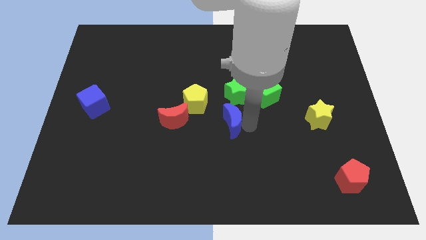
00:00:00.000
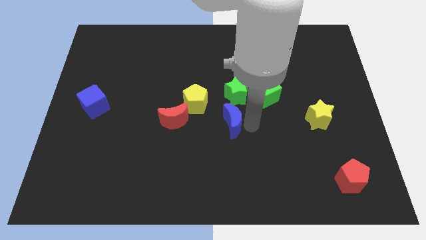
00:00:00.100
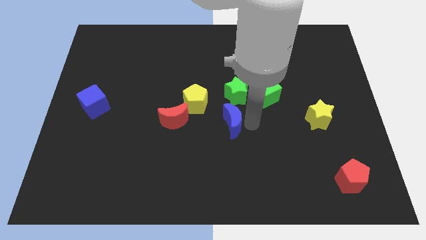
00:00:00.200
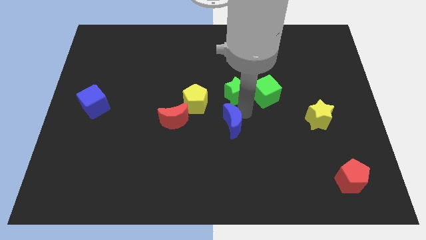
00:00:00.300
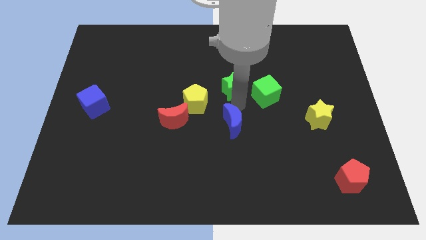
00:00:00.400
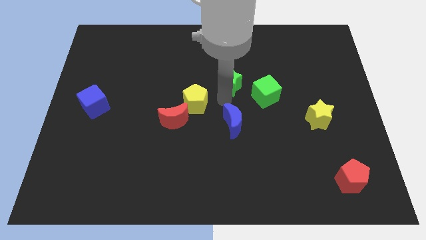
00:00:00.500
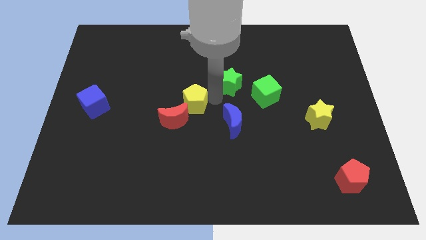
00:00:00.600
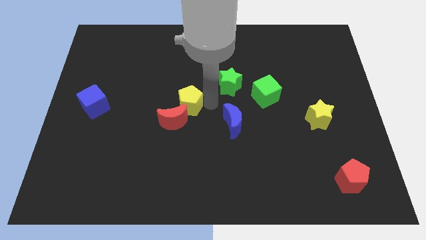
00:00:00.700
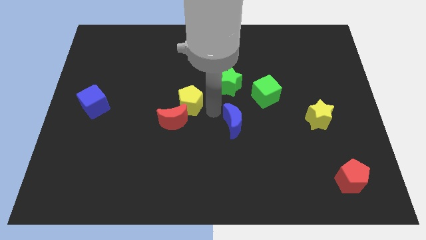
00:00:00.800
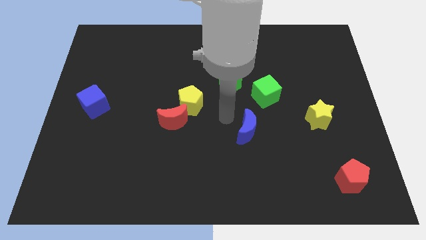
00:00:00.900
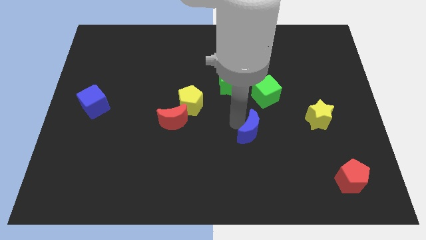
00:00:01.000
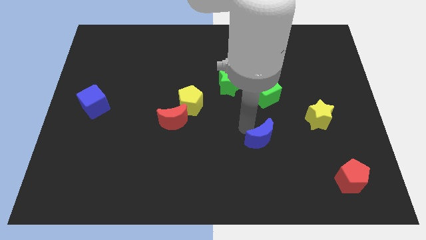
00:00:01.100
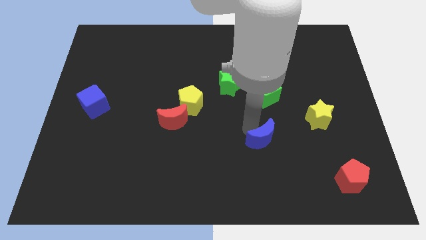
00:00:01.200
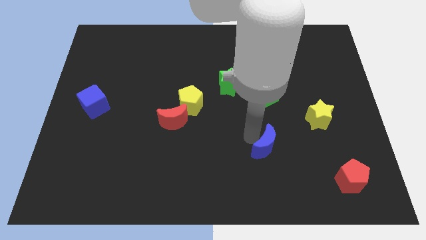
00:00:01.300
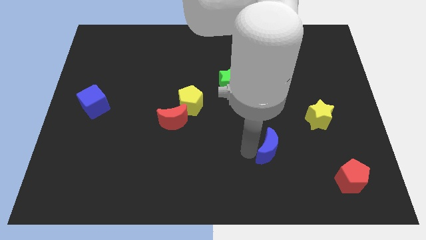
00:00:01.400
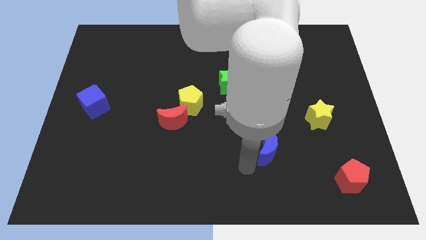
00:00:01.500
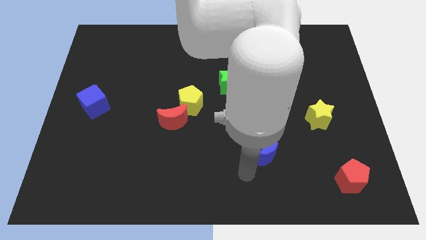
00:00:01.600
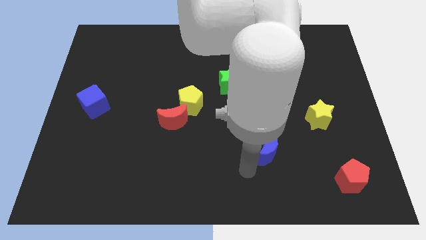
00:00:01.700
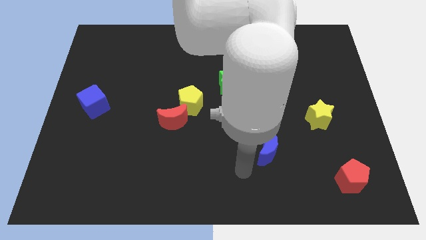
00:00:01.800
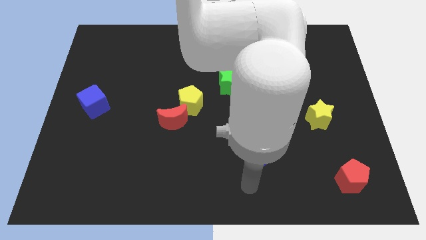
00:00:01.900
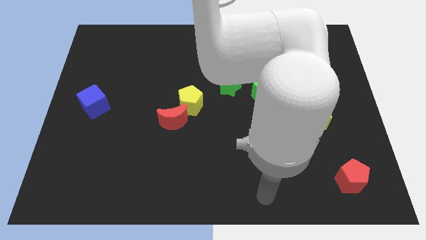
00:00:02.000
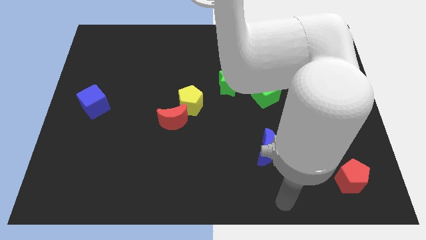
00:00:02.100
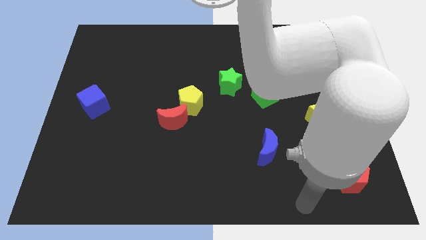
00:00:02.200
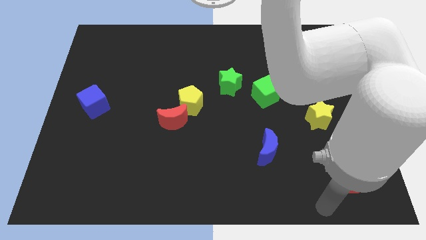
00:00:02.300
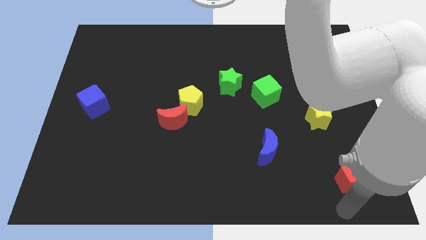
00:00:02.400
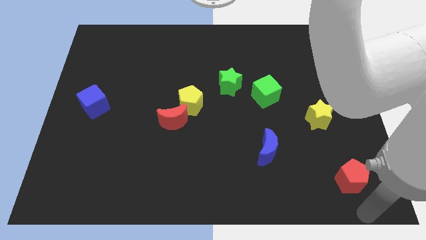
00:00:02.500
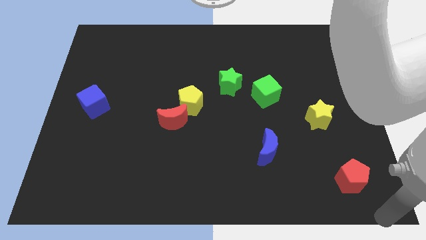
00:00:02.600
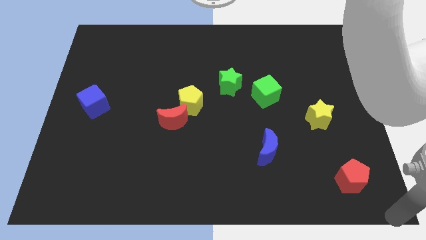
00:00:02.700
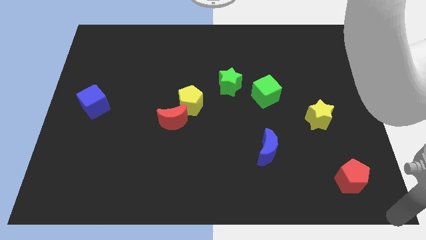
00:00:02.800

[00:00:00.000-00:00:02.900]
move the blue moon towards the red pentagon

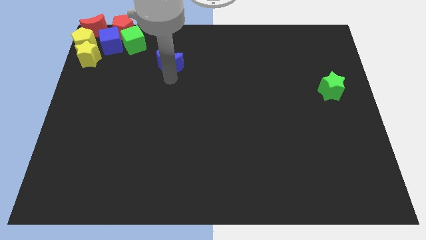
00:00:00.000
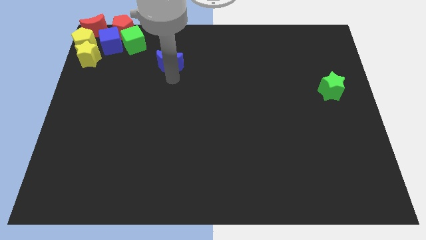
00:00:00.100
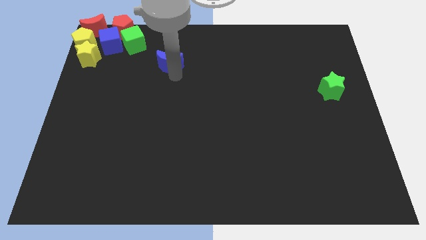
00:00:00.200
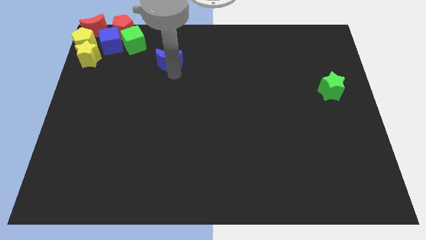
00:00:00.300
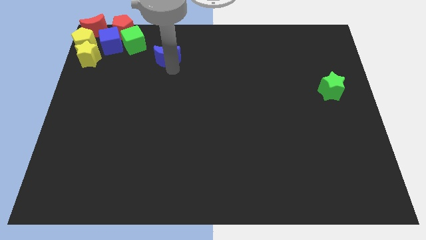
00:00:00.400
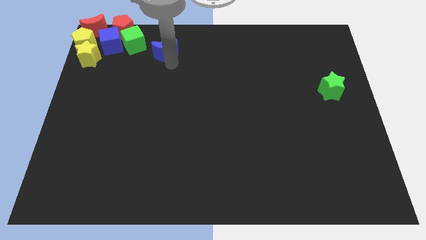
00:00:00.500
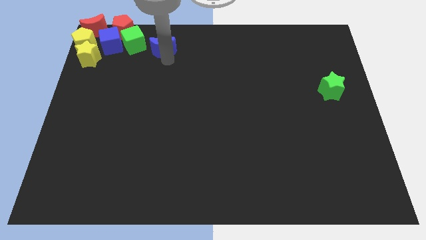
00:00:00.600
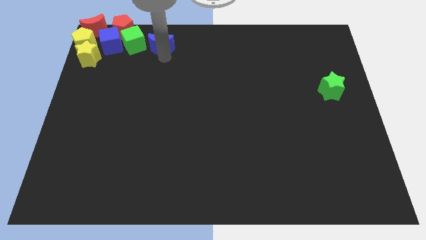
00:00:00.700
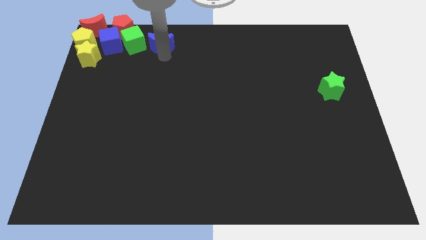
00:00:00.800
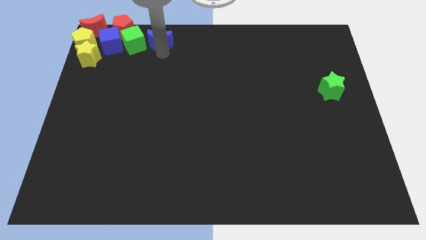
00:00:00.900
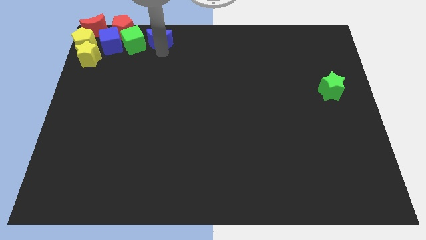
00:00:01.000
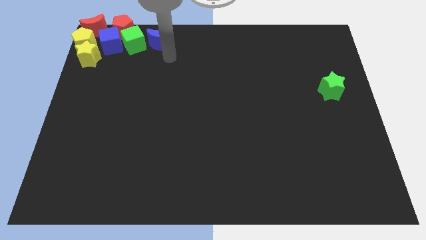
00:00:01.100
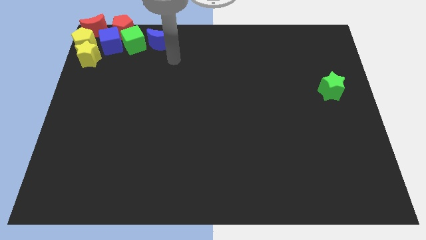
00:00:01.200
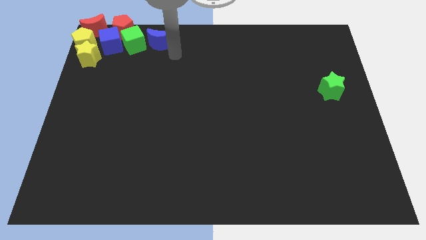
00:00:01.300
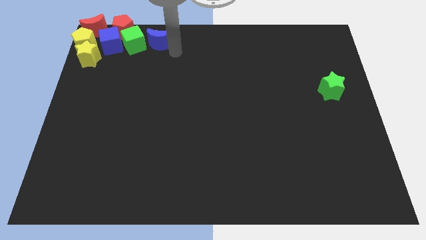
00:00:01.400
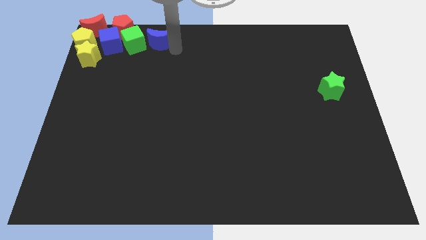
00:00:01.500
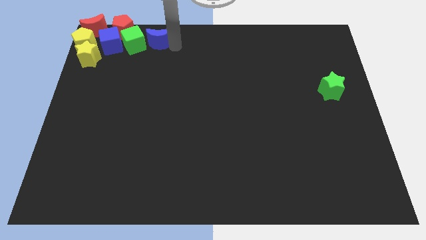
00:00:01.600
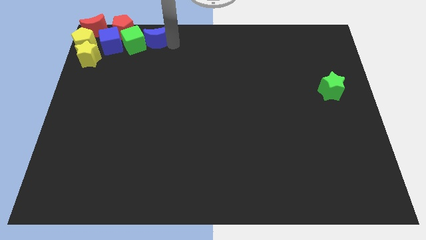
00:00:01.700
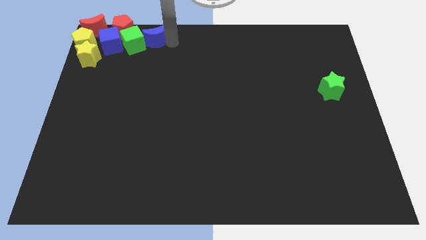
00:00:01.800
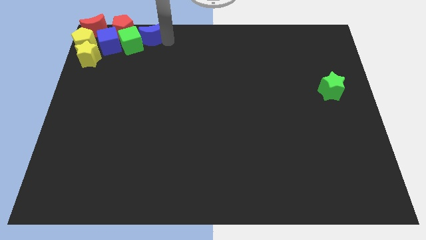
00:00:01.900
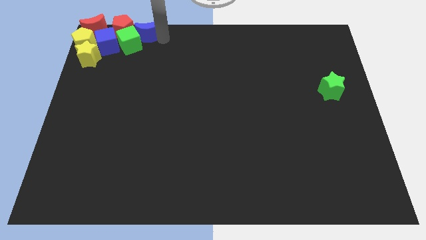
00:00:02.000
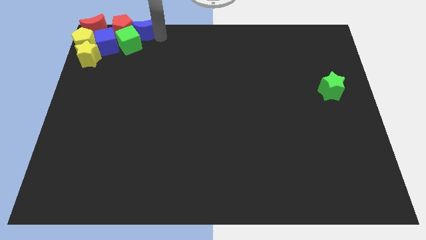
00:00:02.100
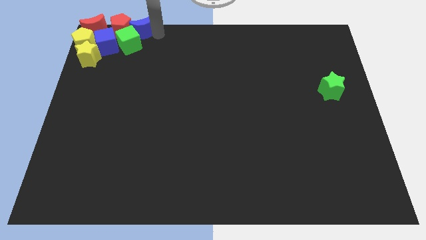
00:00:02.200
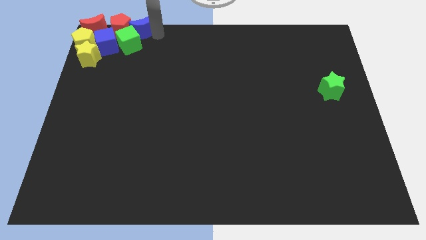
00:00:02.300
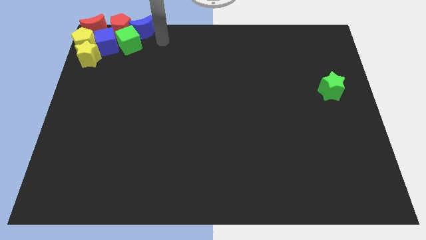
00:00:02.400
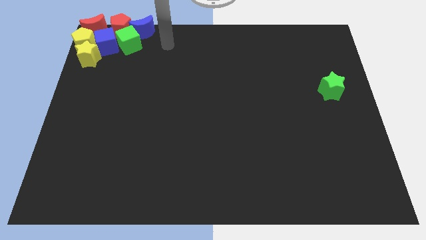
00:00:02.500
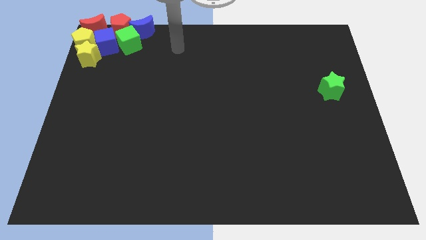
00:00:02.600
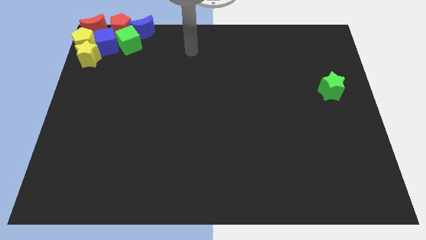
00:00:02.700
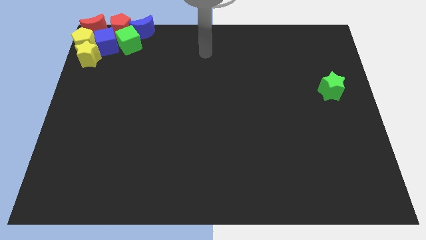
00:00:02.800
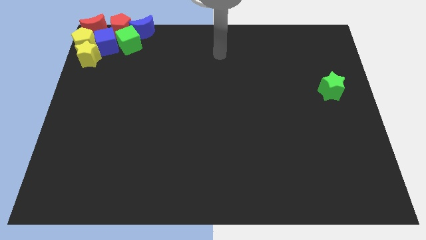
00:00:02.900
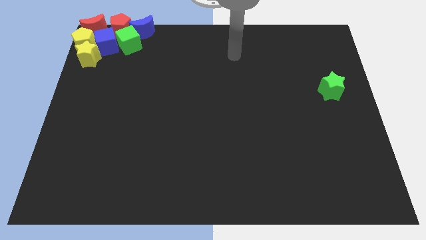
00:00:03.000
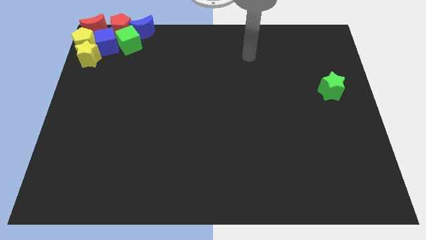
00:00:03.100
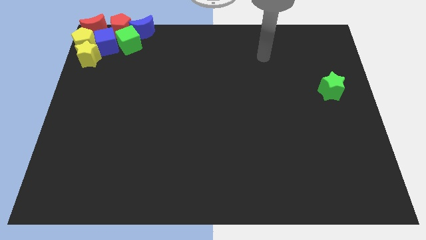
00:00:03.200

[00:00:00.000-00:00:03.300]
place the blue moon right to the red pentagon

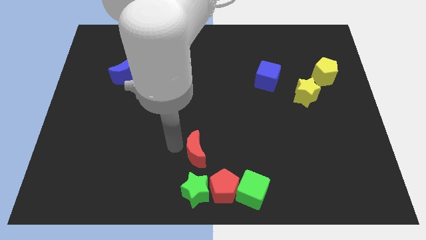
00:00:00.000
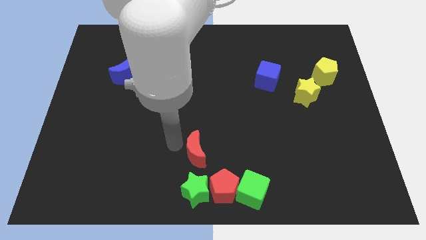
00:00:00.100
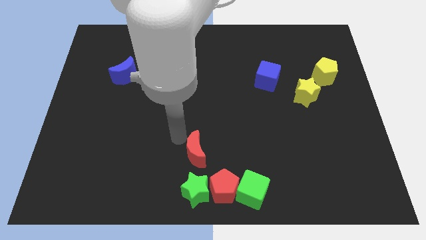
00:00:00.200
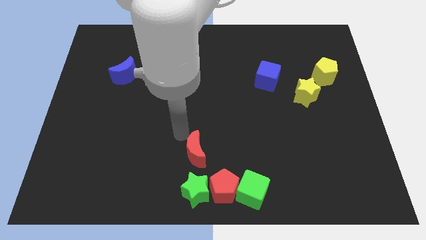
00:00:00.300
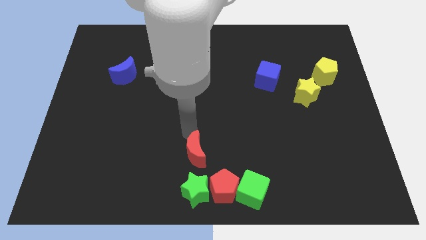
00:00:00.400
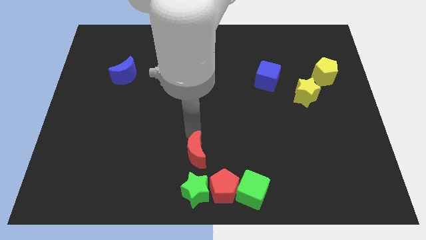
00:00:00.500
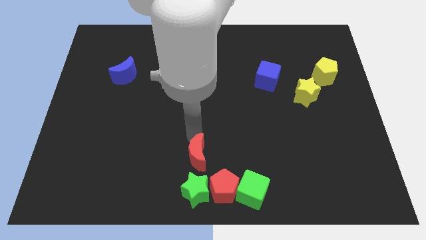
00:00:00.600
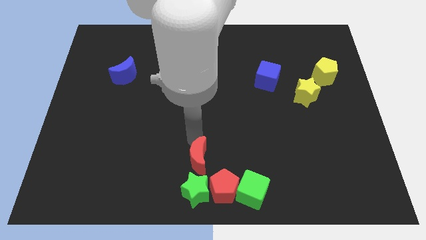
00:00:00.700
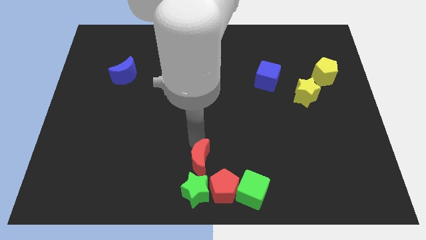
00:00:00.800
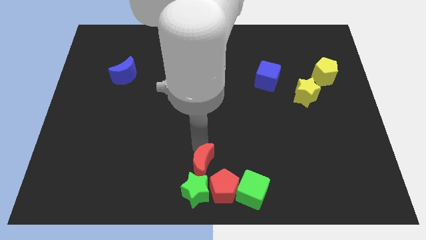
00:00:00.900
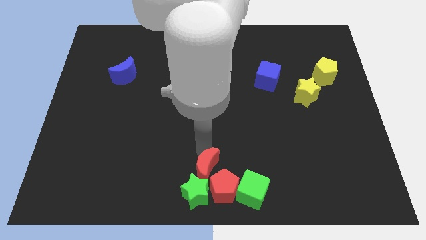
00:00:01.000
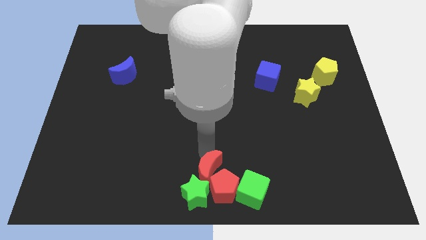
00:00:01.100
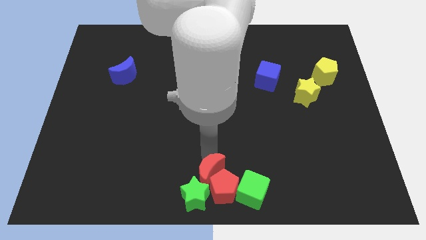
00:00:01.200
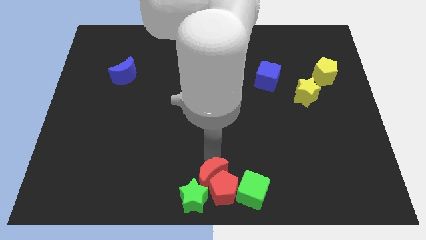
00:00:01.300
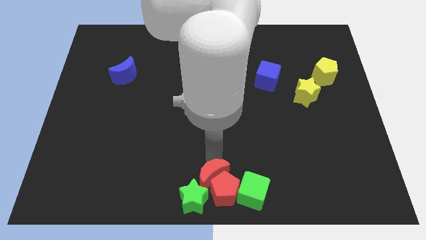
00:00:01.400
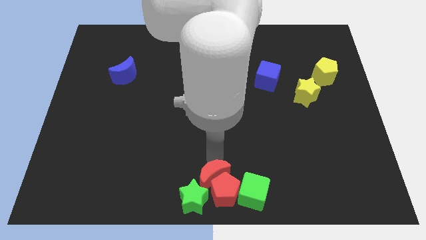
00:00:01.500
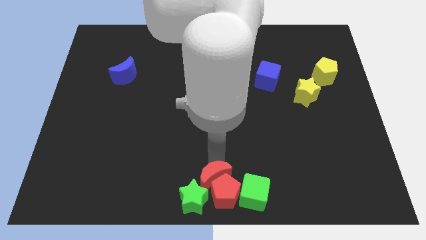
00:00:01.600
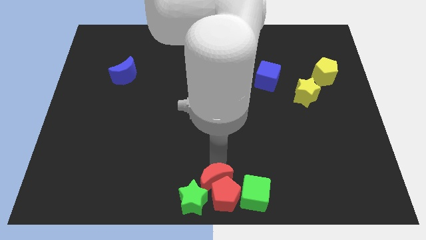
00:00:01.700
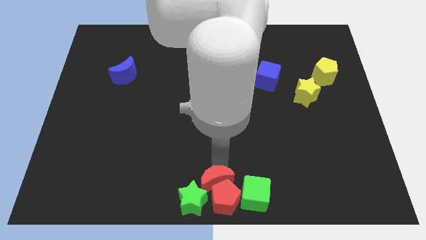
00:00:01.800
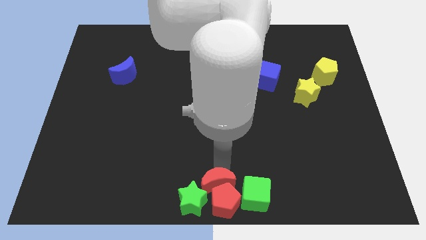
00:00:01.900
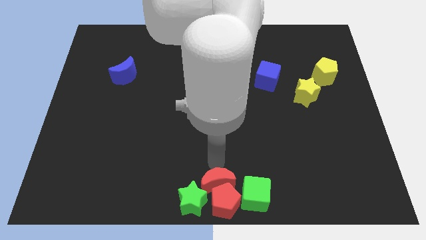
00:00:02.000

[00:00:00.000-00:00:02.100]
push the red moon into the group of both the green blocks and the red pentagon

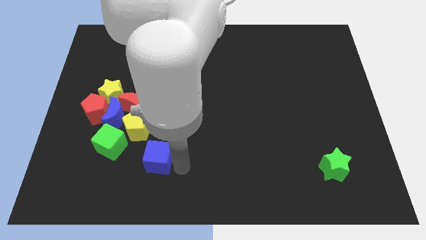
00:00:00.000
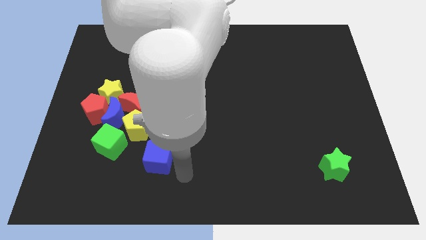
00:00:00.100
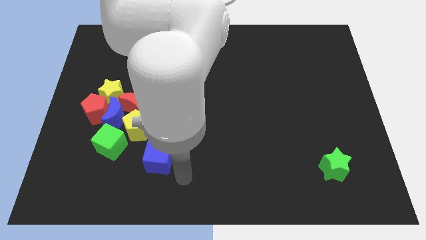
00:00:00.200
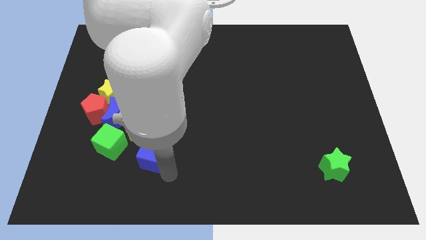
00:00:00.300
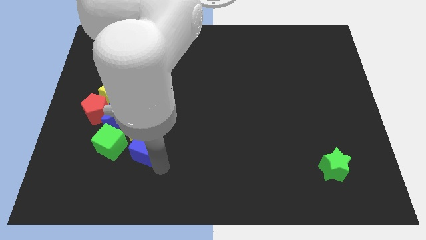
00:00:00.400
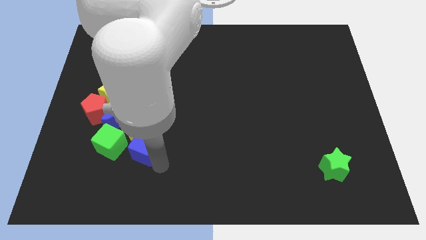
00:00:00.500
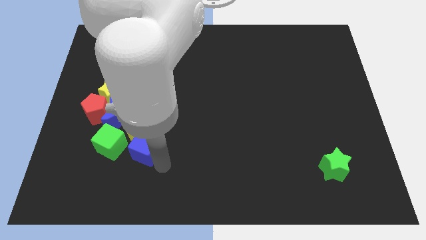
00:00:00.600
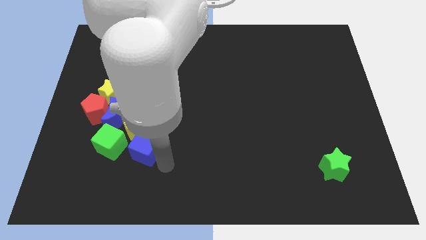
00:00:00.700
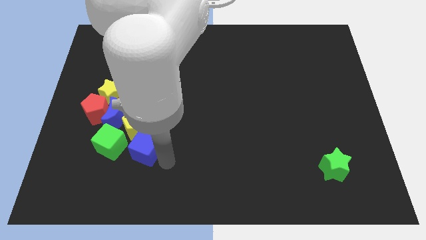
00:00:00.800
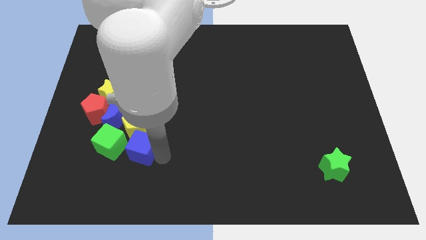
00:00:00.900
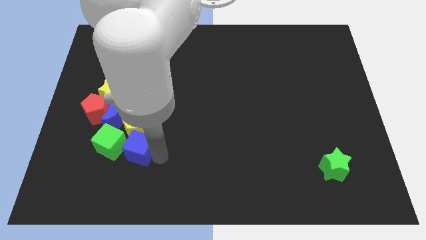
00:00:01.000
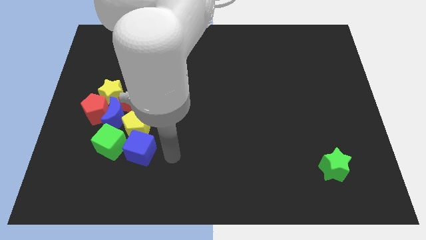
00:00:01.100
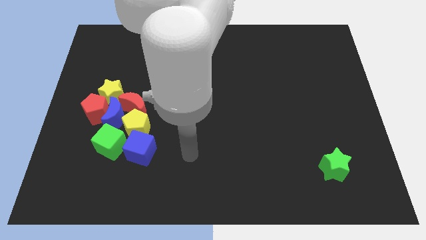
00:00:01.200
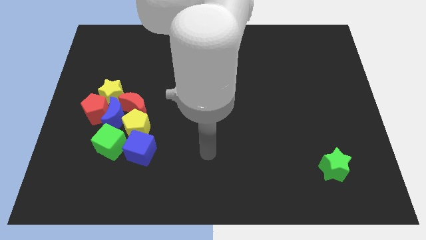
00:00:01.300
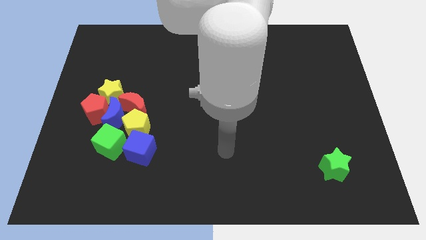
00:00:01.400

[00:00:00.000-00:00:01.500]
push the blue cube under the yellow pentagon
